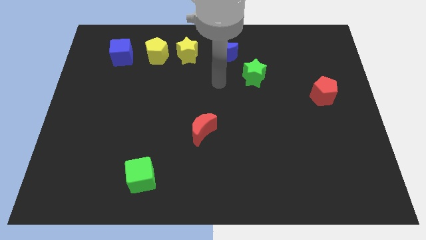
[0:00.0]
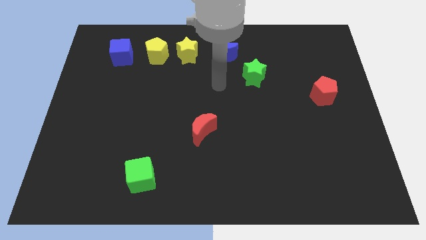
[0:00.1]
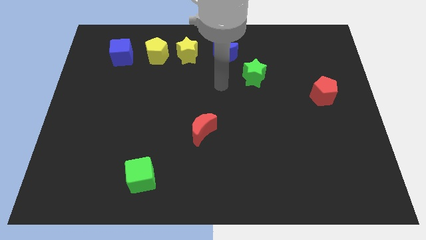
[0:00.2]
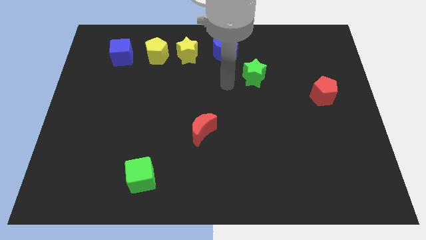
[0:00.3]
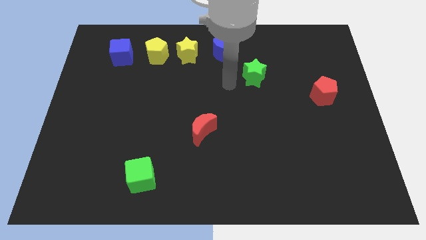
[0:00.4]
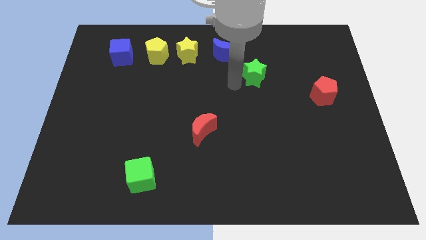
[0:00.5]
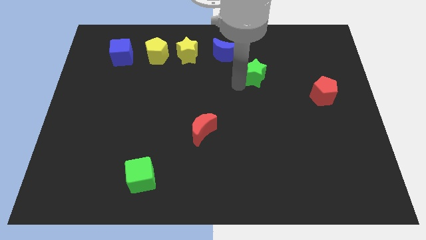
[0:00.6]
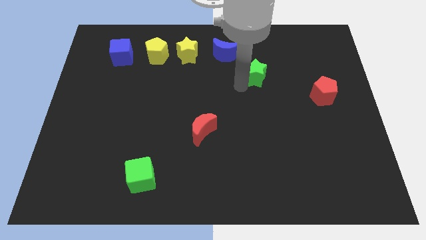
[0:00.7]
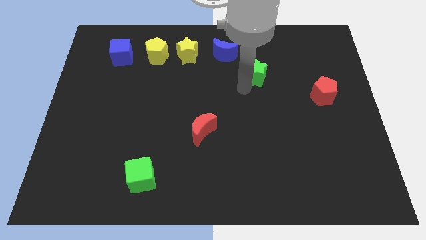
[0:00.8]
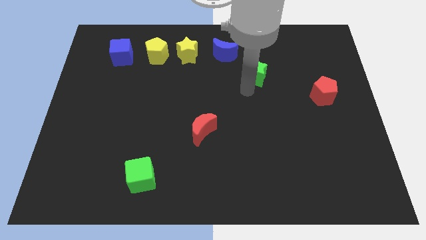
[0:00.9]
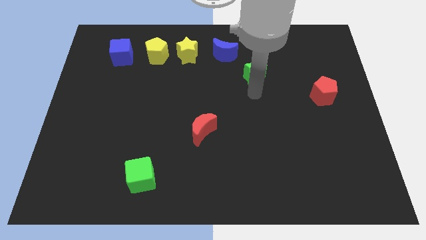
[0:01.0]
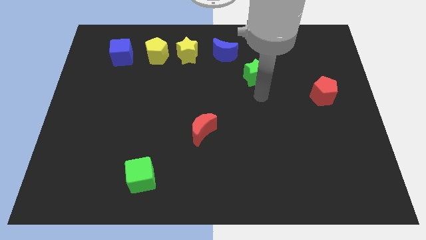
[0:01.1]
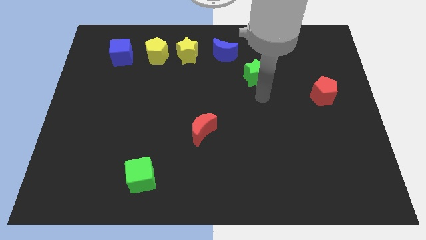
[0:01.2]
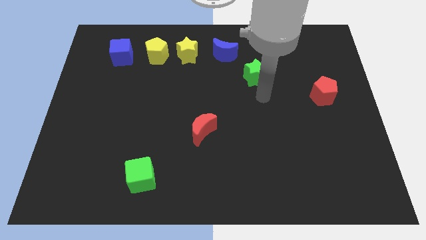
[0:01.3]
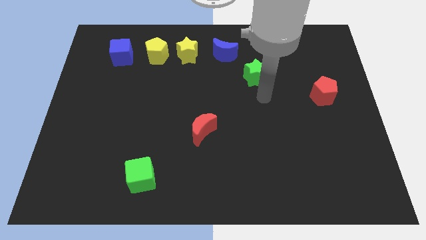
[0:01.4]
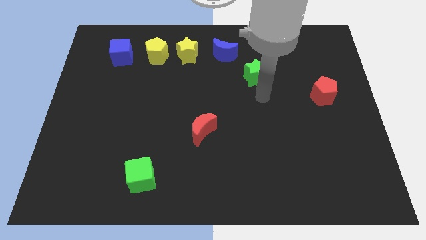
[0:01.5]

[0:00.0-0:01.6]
move your arm towards the green star

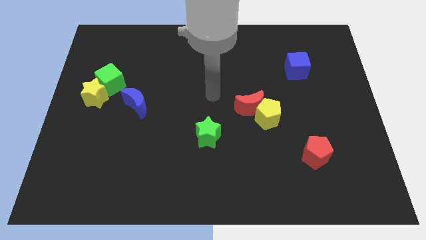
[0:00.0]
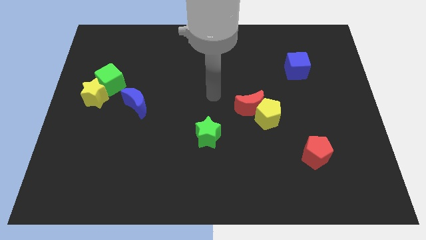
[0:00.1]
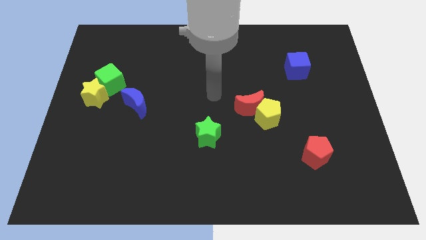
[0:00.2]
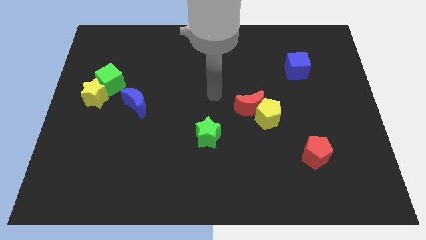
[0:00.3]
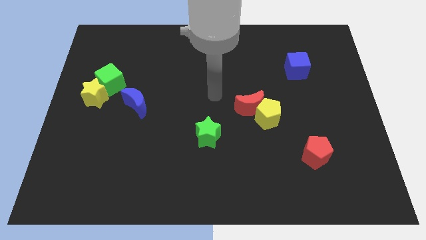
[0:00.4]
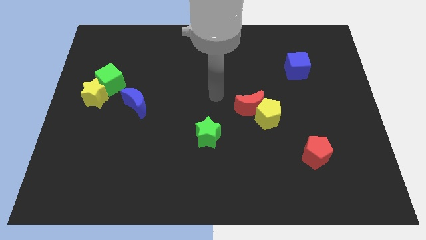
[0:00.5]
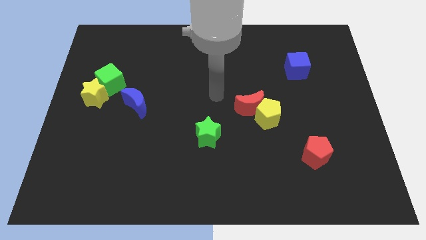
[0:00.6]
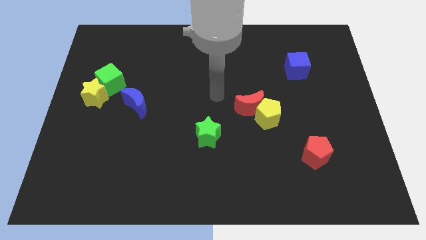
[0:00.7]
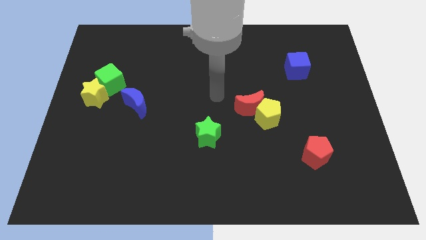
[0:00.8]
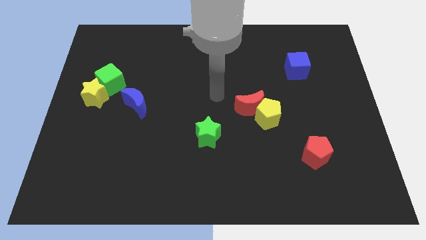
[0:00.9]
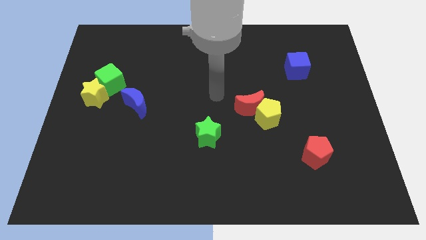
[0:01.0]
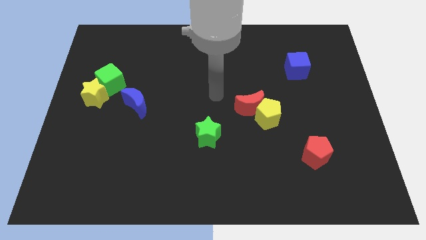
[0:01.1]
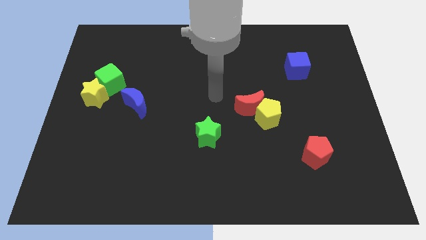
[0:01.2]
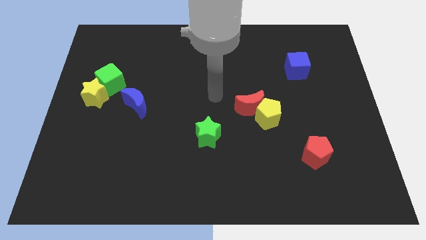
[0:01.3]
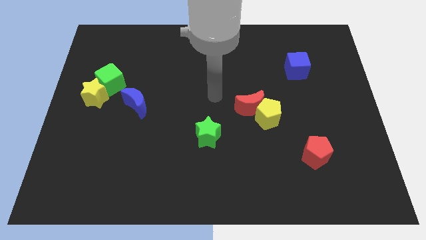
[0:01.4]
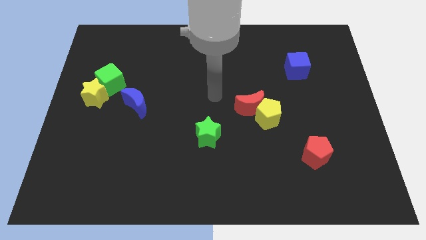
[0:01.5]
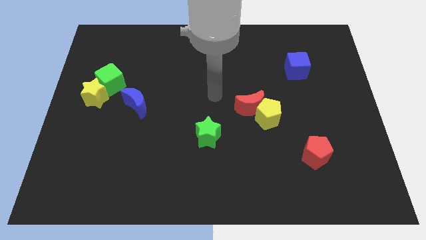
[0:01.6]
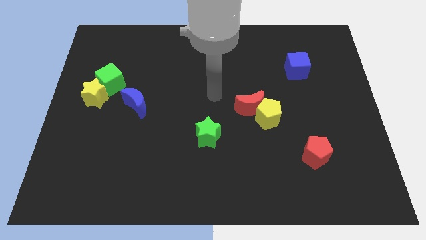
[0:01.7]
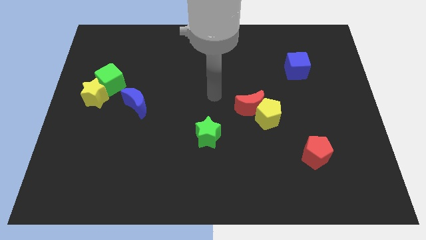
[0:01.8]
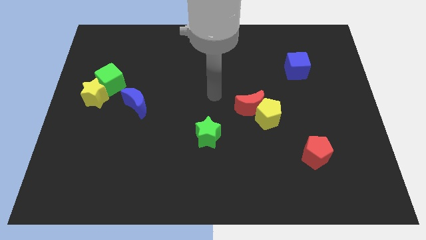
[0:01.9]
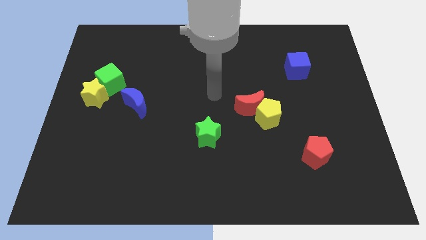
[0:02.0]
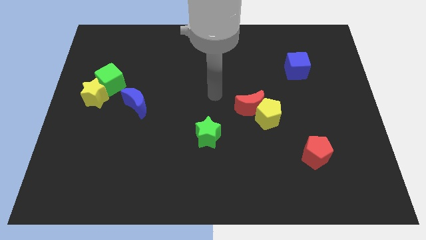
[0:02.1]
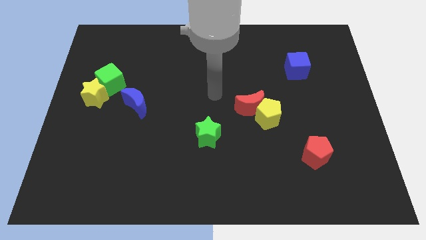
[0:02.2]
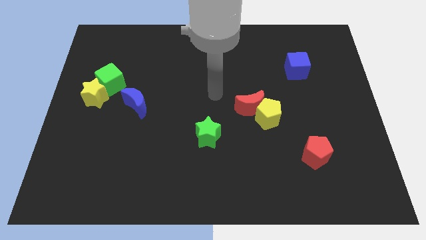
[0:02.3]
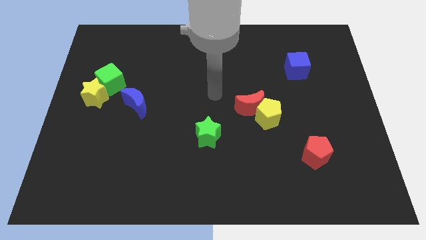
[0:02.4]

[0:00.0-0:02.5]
move the arm towards left and right on the board

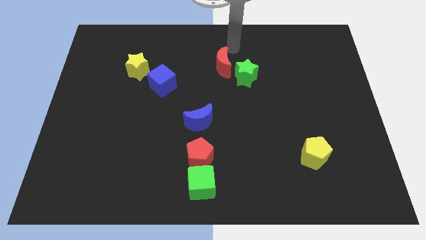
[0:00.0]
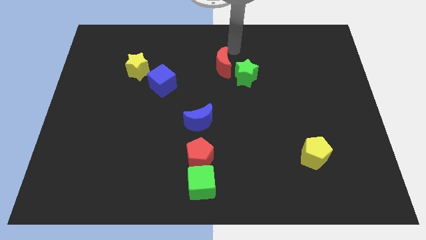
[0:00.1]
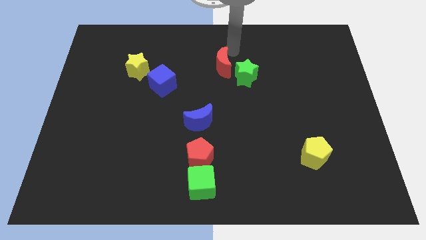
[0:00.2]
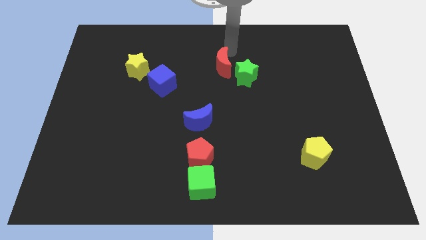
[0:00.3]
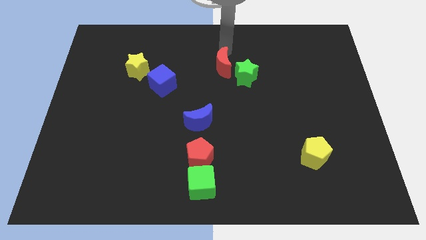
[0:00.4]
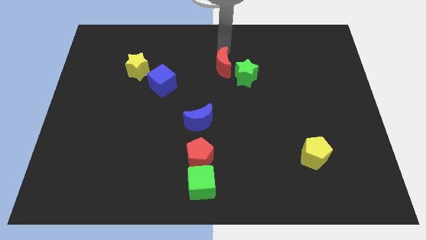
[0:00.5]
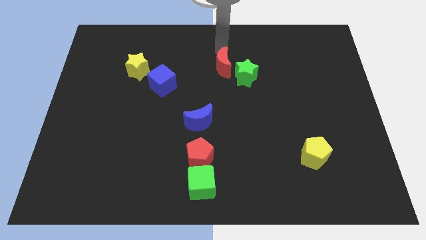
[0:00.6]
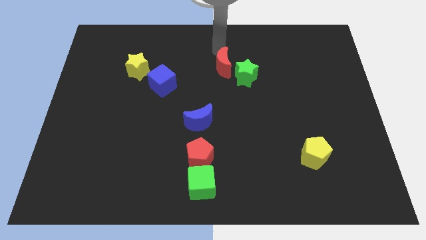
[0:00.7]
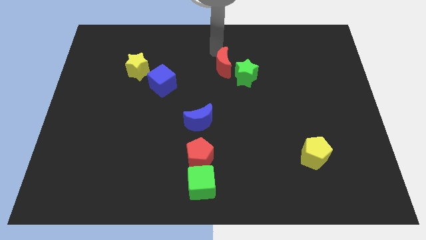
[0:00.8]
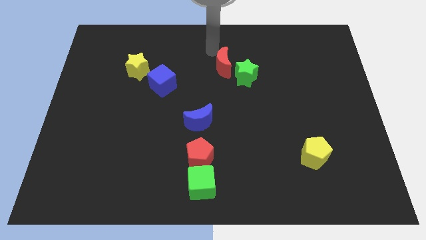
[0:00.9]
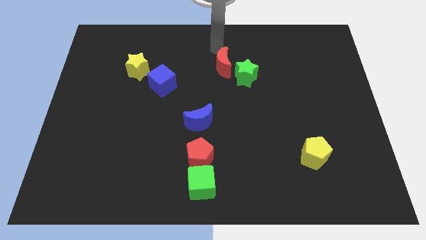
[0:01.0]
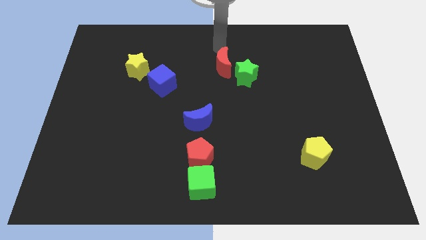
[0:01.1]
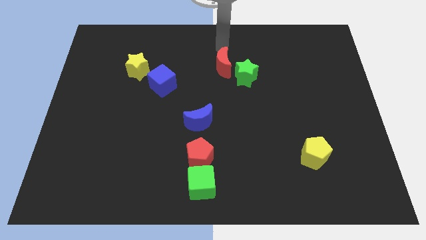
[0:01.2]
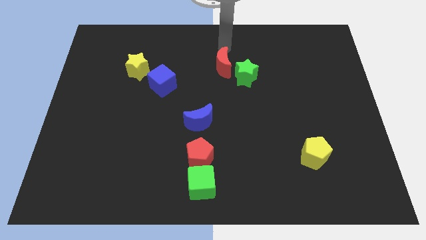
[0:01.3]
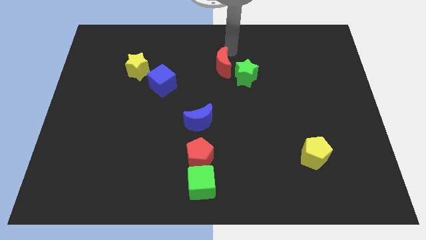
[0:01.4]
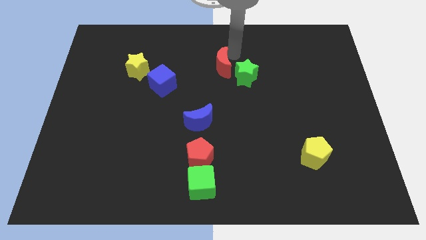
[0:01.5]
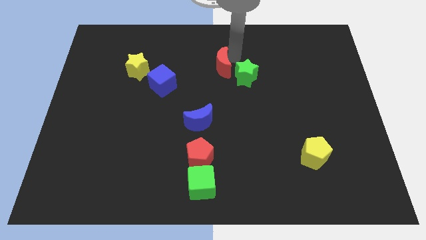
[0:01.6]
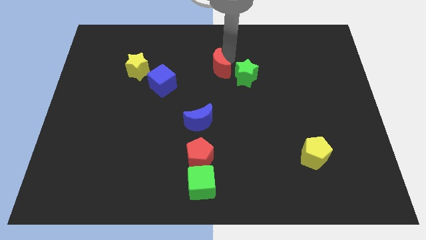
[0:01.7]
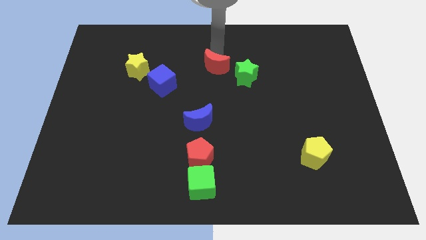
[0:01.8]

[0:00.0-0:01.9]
slightly move the red crescent

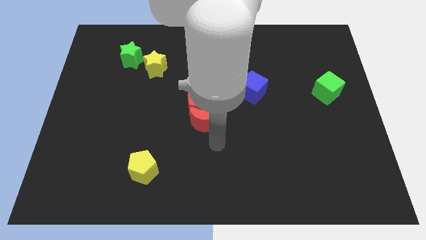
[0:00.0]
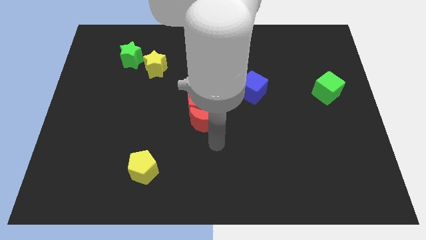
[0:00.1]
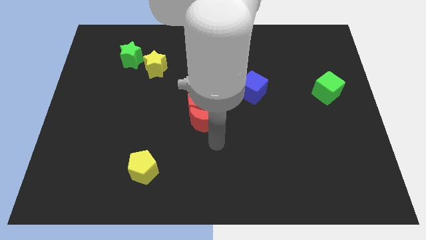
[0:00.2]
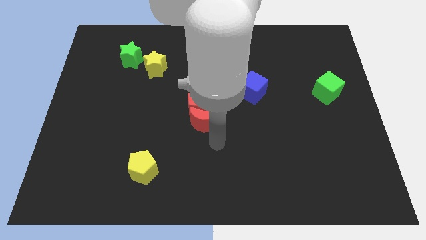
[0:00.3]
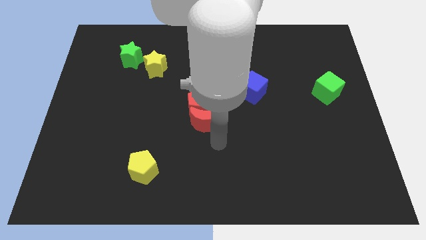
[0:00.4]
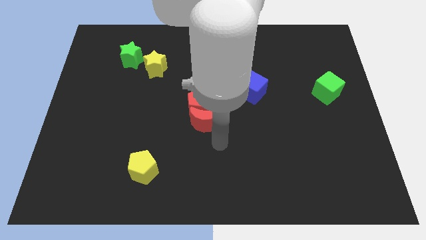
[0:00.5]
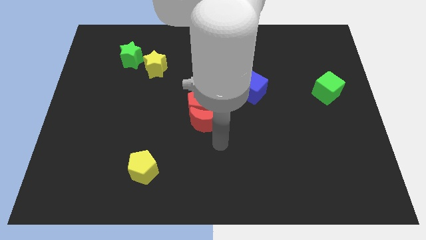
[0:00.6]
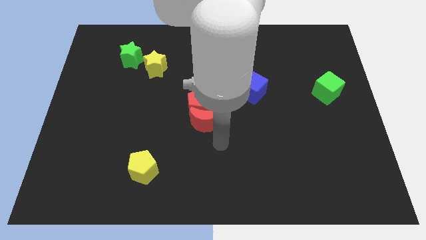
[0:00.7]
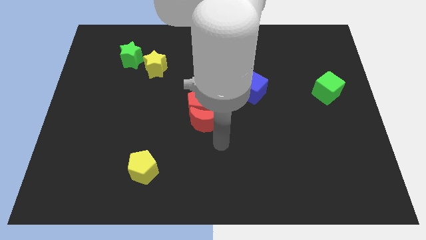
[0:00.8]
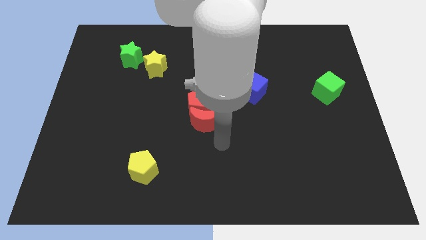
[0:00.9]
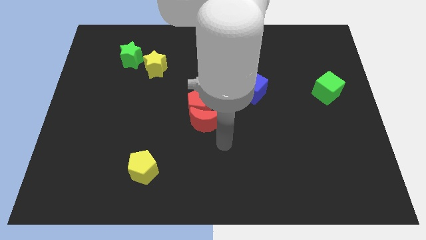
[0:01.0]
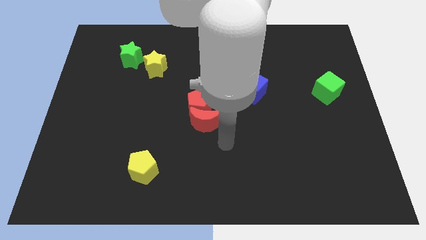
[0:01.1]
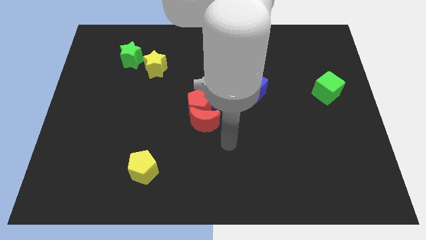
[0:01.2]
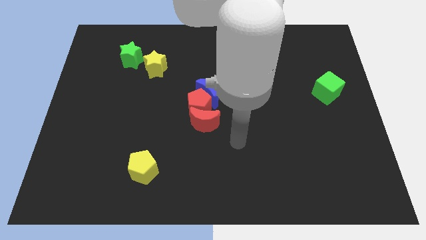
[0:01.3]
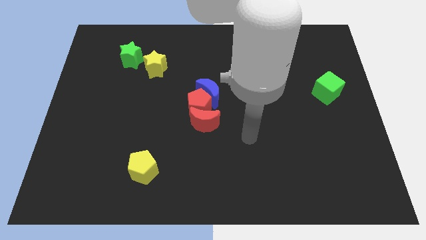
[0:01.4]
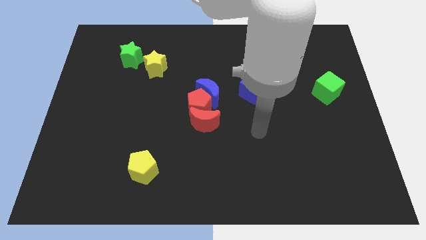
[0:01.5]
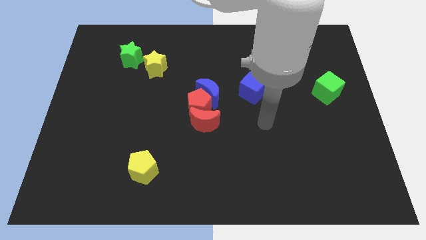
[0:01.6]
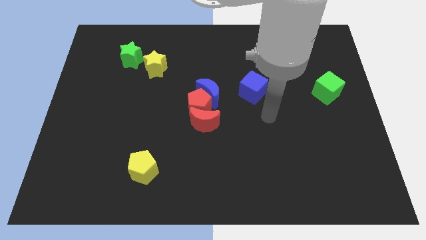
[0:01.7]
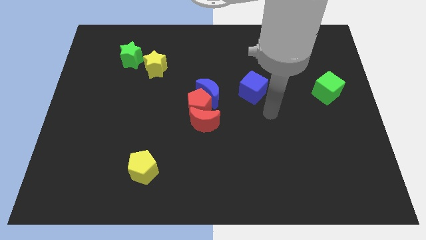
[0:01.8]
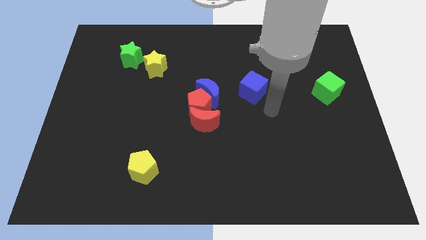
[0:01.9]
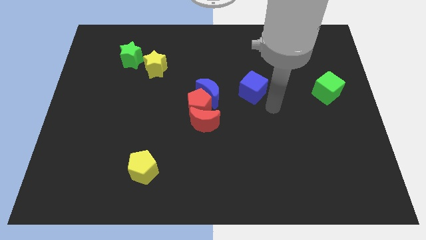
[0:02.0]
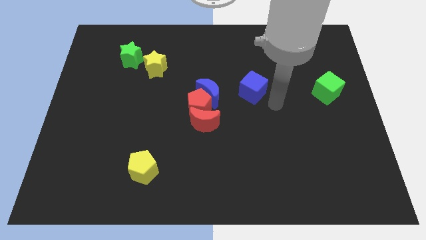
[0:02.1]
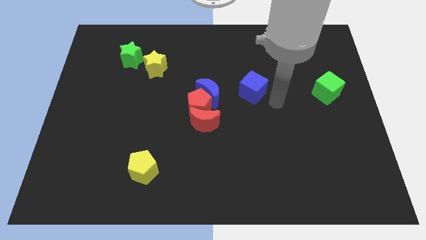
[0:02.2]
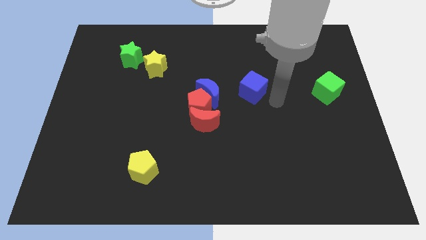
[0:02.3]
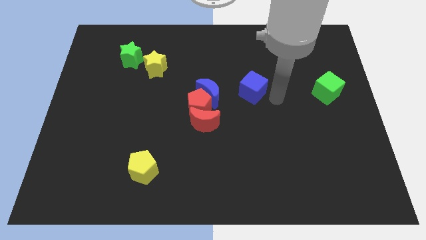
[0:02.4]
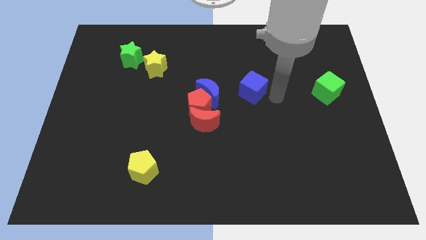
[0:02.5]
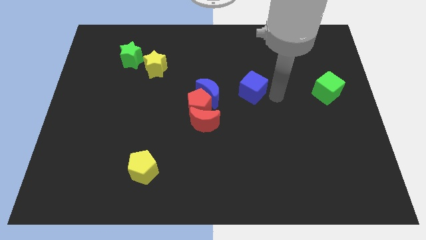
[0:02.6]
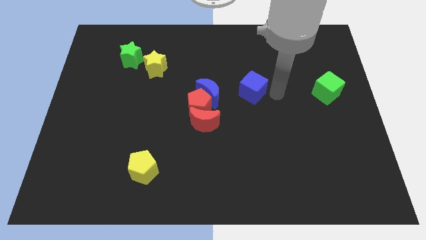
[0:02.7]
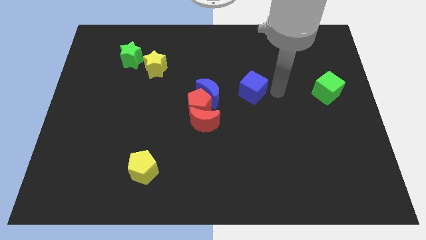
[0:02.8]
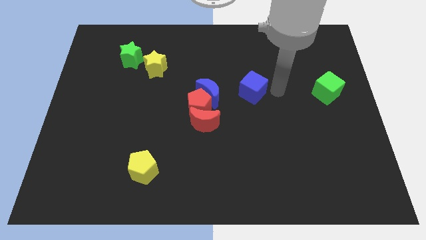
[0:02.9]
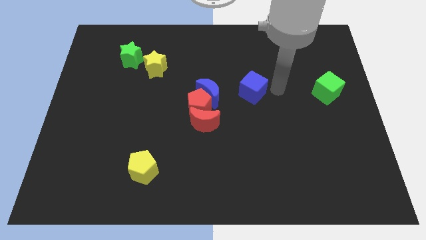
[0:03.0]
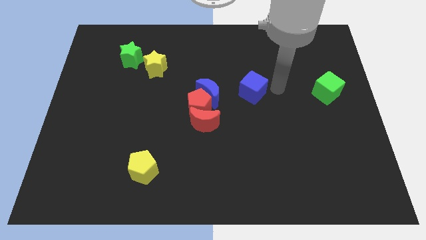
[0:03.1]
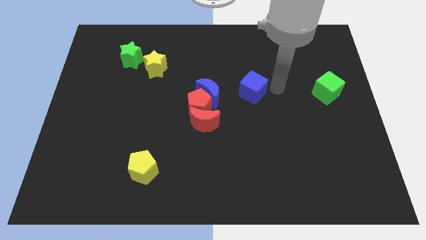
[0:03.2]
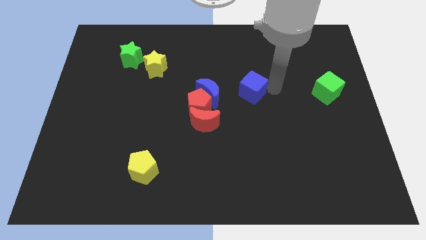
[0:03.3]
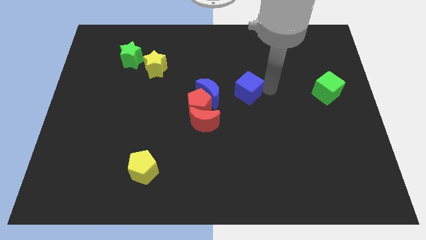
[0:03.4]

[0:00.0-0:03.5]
slightly move the blue cube towards the left
